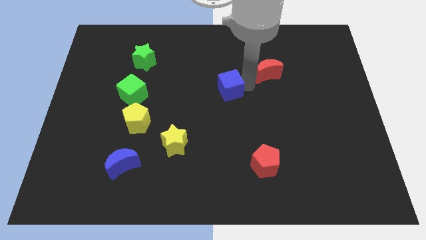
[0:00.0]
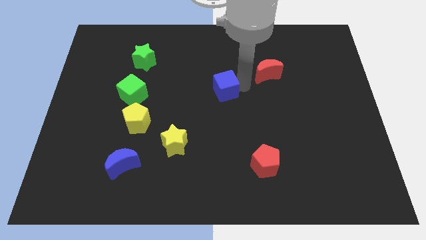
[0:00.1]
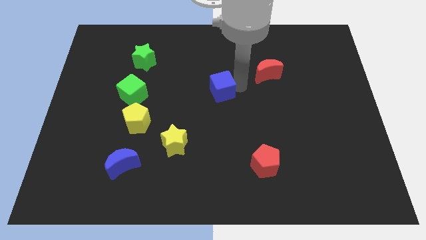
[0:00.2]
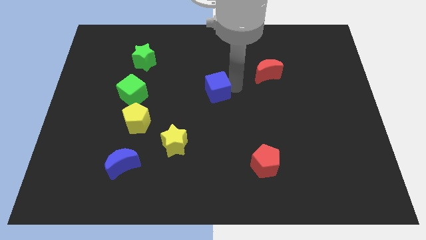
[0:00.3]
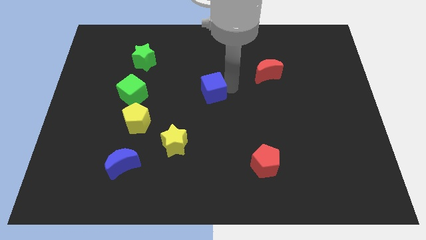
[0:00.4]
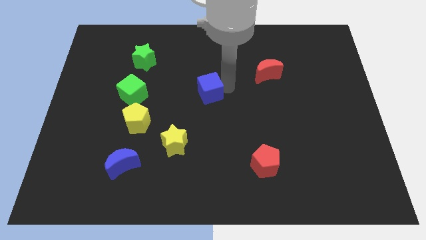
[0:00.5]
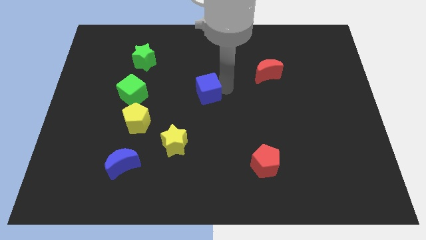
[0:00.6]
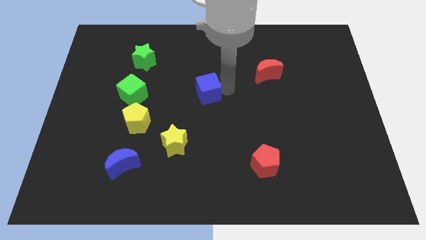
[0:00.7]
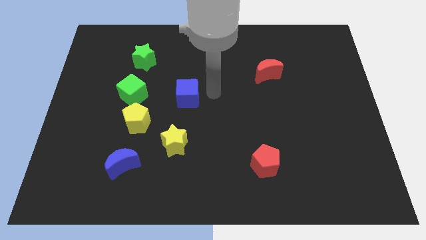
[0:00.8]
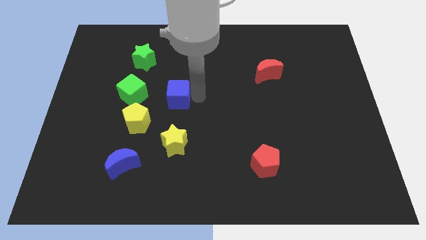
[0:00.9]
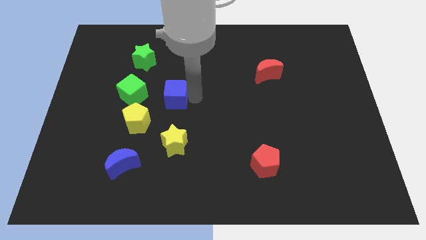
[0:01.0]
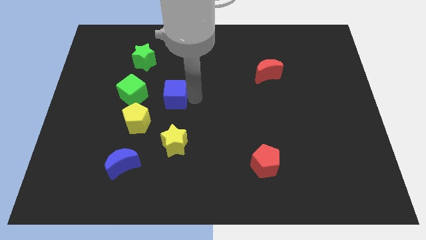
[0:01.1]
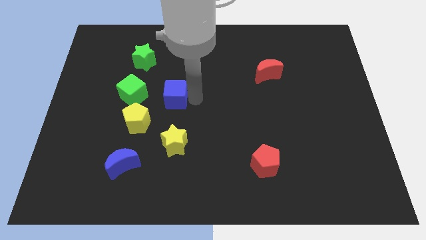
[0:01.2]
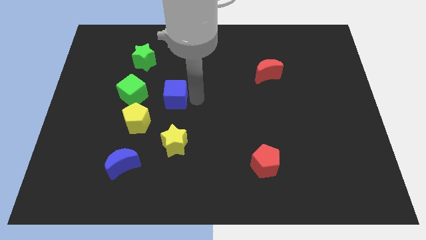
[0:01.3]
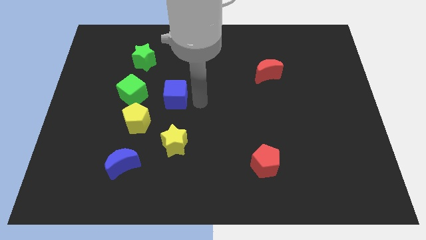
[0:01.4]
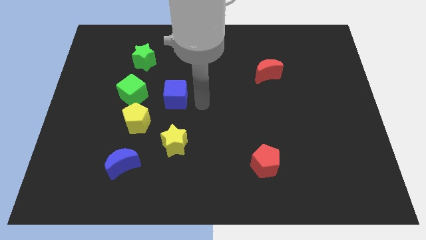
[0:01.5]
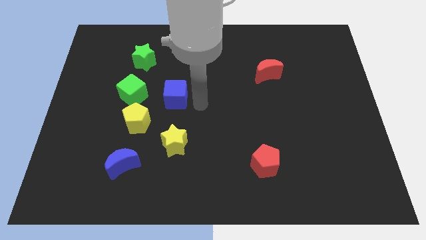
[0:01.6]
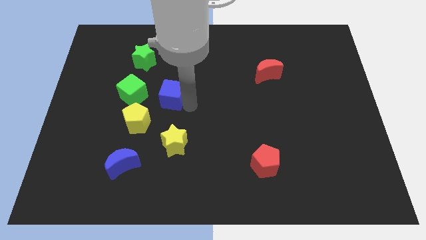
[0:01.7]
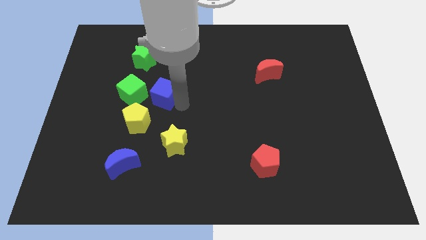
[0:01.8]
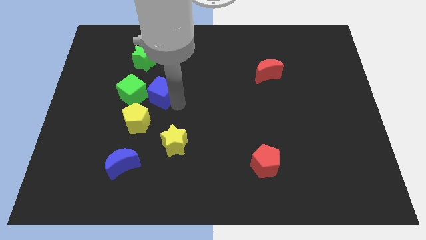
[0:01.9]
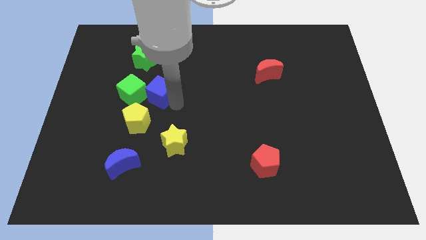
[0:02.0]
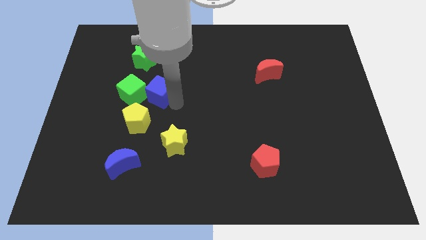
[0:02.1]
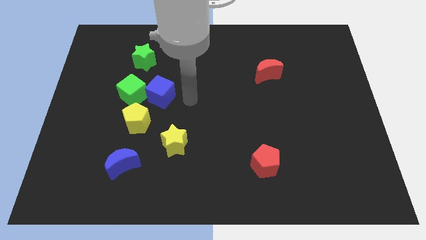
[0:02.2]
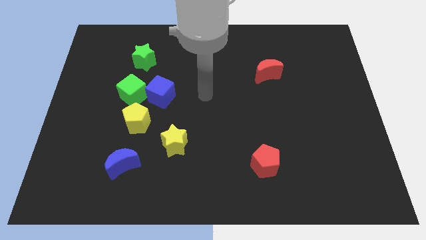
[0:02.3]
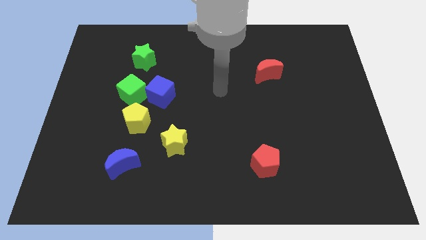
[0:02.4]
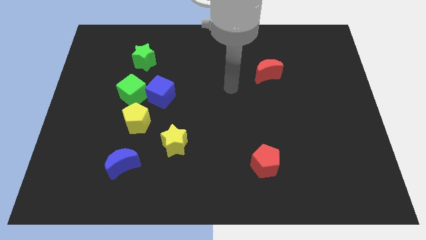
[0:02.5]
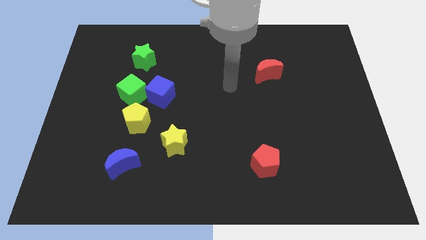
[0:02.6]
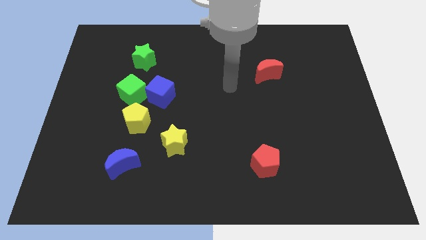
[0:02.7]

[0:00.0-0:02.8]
move the blue cube right to the green cube

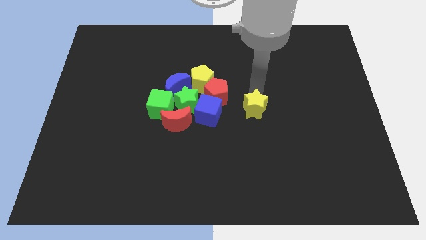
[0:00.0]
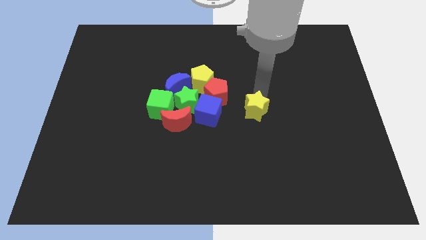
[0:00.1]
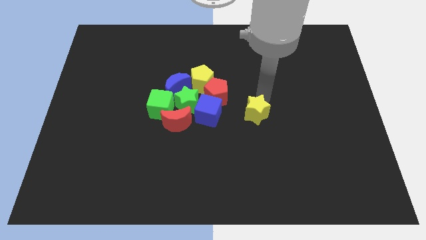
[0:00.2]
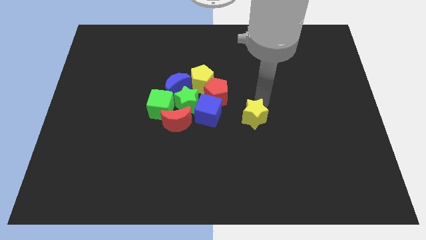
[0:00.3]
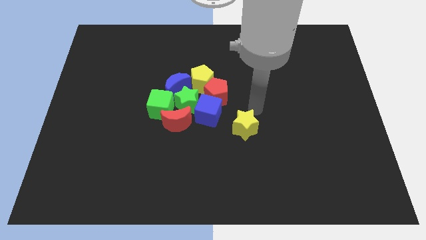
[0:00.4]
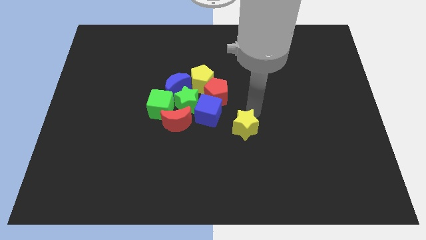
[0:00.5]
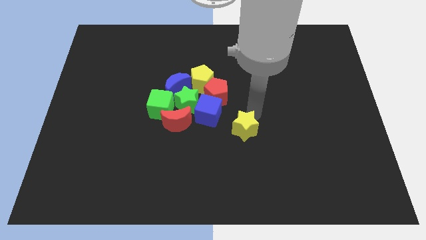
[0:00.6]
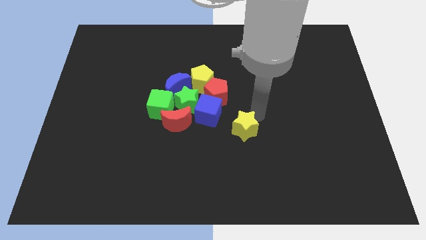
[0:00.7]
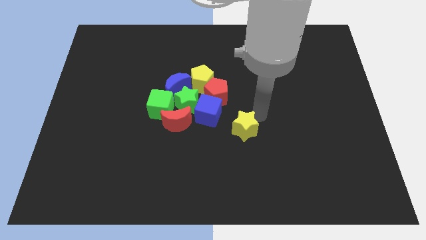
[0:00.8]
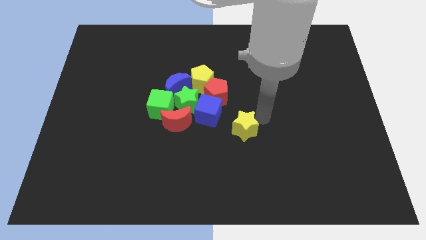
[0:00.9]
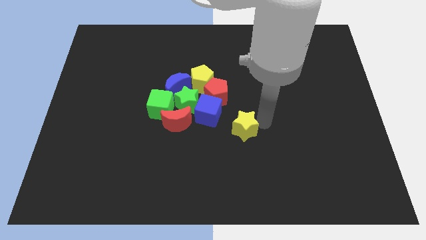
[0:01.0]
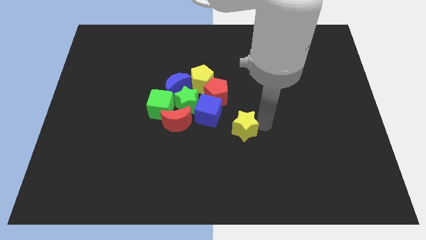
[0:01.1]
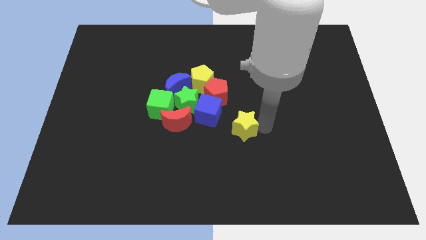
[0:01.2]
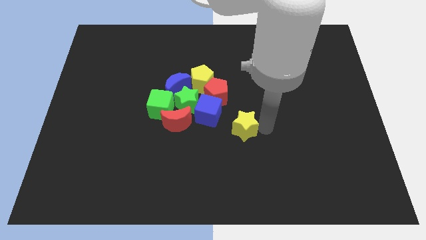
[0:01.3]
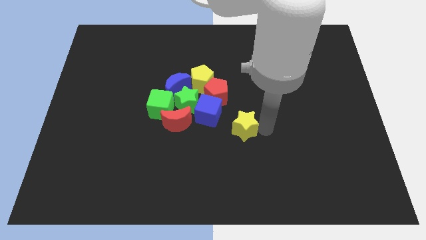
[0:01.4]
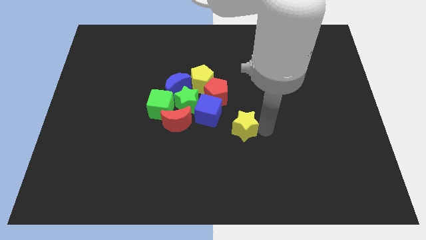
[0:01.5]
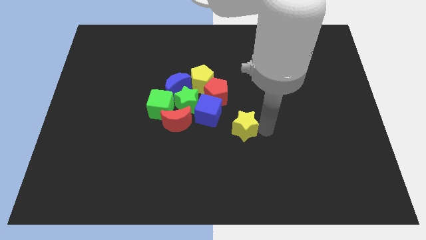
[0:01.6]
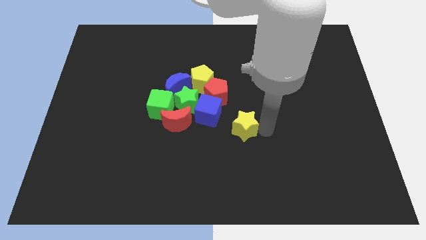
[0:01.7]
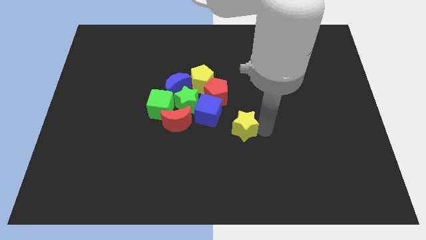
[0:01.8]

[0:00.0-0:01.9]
slightly push the yellow star downwards

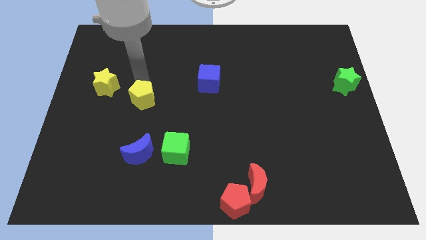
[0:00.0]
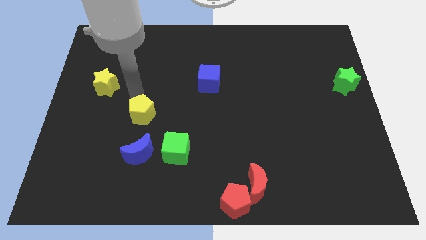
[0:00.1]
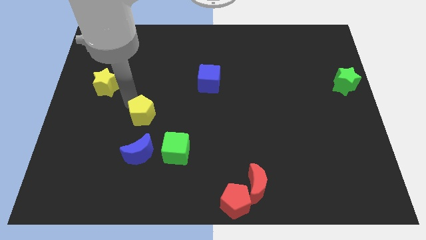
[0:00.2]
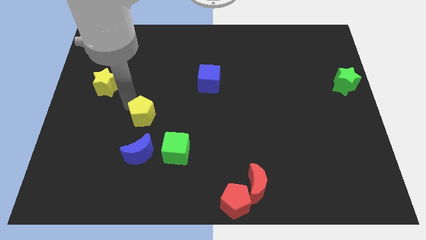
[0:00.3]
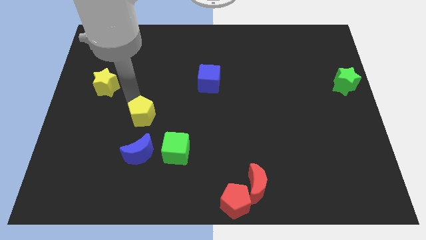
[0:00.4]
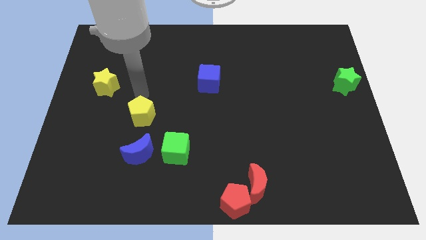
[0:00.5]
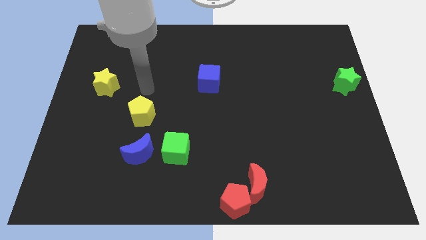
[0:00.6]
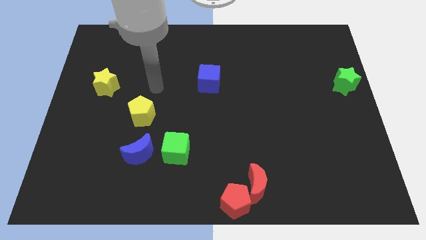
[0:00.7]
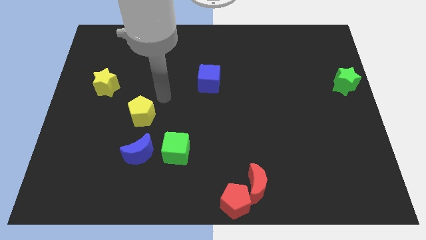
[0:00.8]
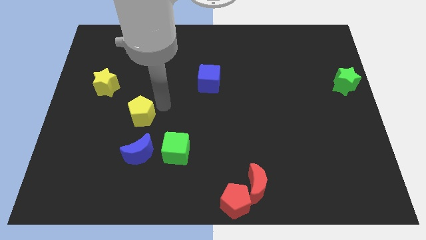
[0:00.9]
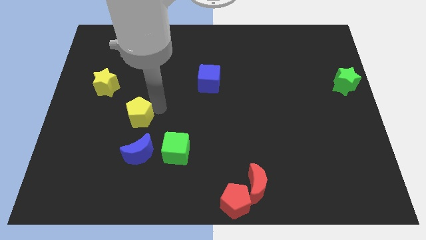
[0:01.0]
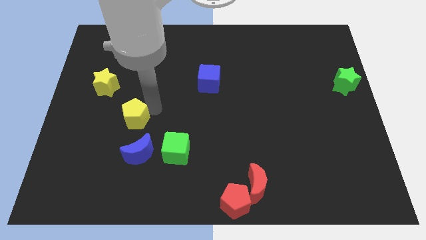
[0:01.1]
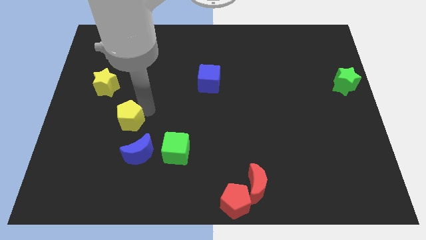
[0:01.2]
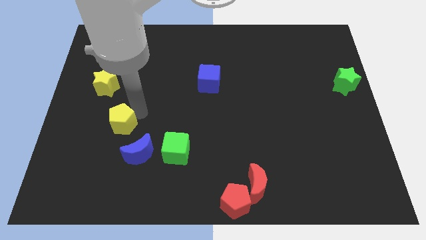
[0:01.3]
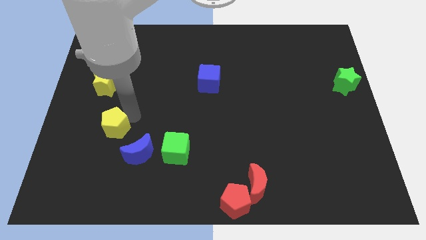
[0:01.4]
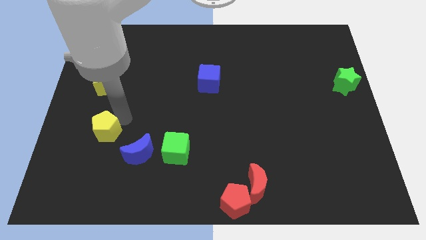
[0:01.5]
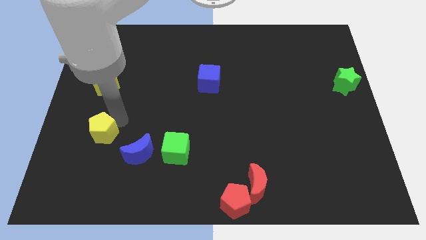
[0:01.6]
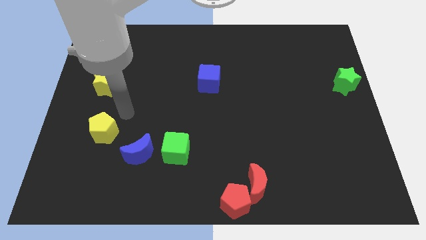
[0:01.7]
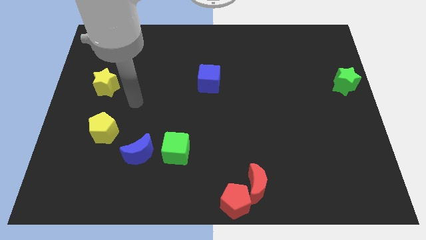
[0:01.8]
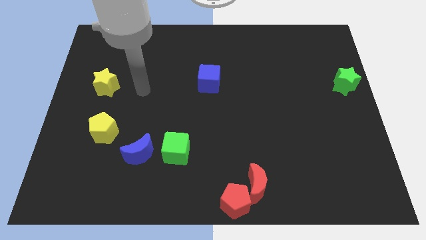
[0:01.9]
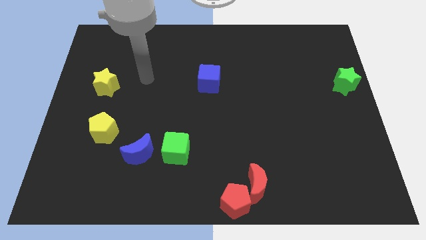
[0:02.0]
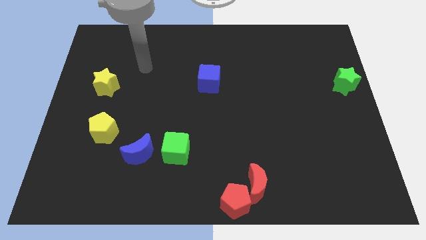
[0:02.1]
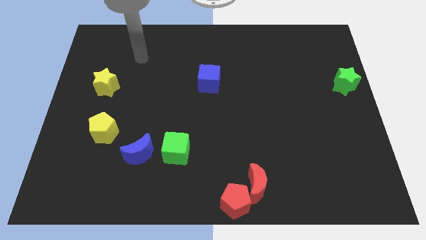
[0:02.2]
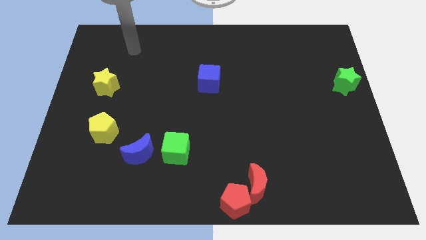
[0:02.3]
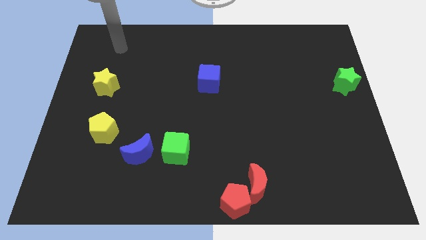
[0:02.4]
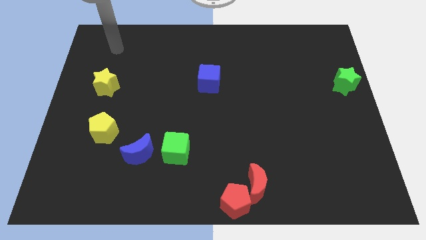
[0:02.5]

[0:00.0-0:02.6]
move the yellow pentagon down to the yellow star

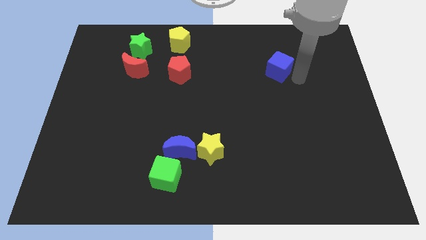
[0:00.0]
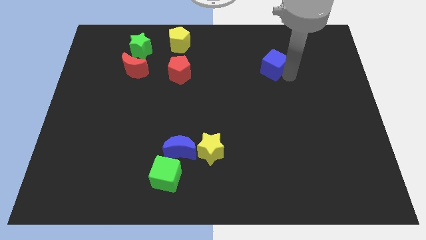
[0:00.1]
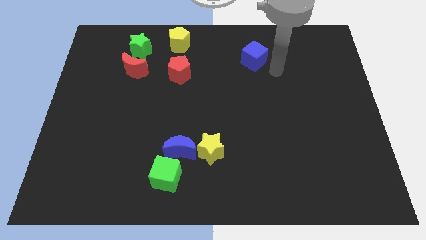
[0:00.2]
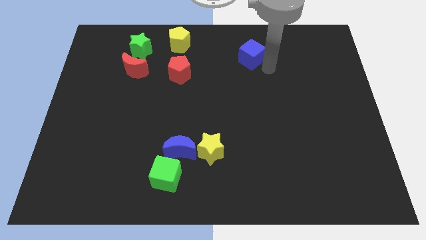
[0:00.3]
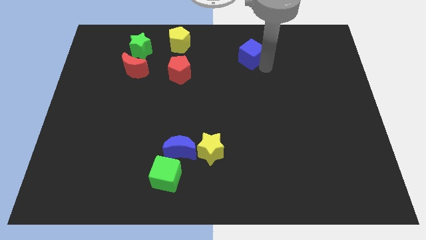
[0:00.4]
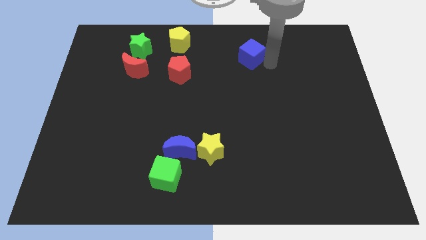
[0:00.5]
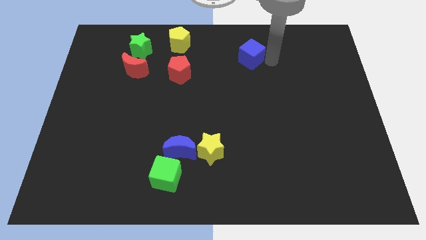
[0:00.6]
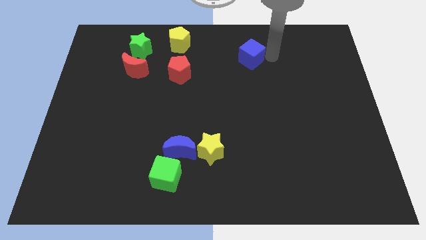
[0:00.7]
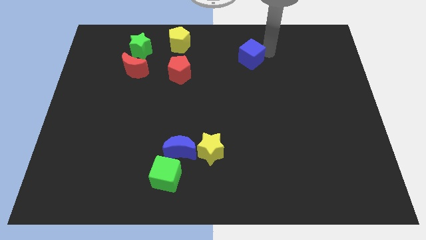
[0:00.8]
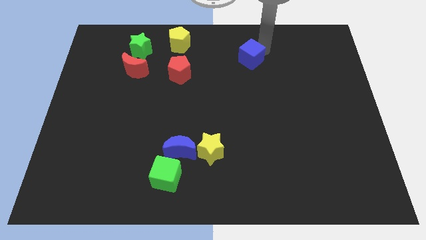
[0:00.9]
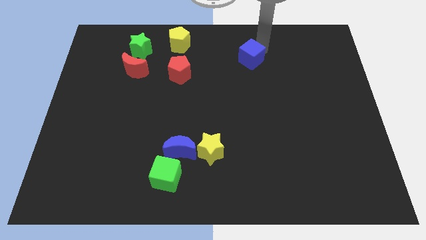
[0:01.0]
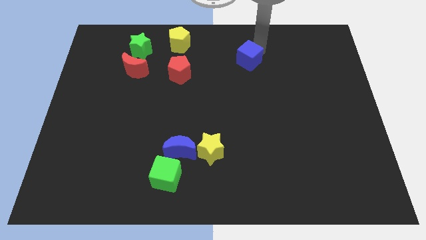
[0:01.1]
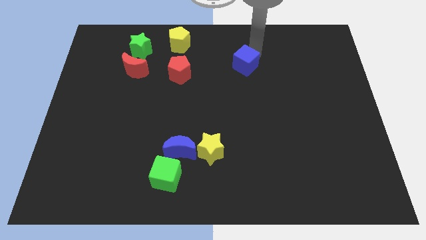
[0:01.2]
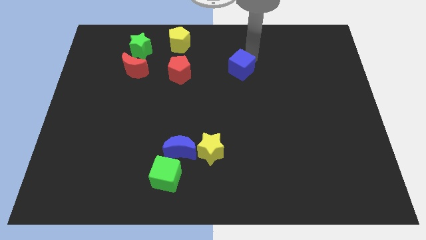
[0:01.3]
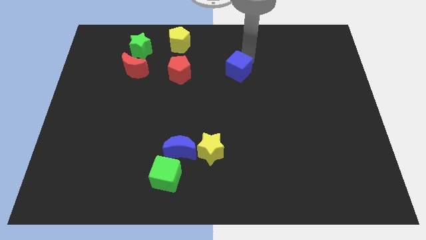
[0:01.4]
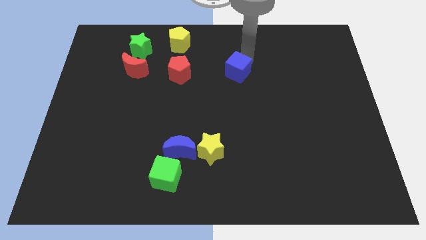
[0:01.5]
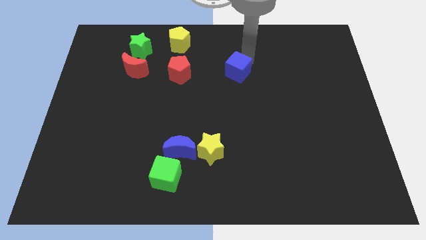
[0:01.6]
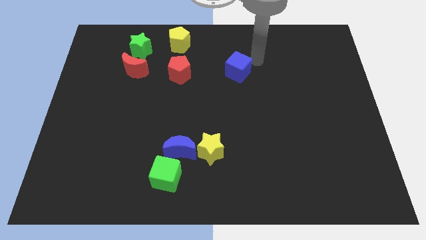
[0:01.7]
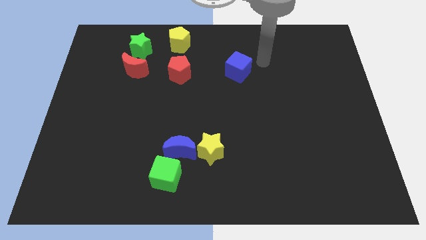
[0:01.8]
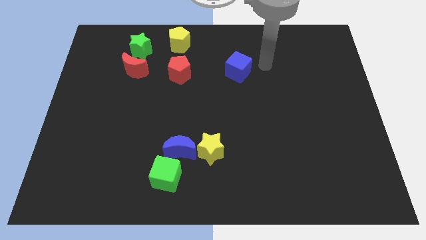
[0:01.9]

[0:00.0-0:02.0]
place the blue cube to the right of red pentagon
